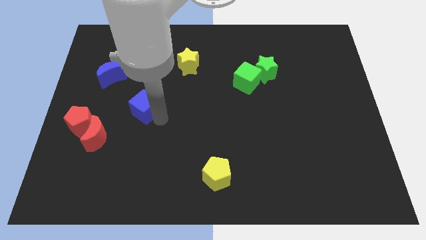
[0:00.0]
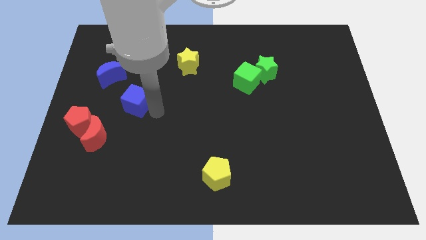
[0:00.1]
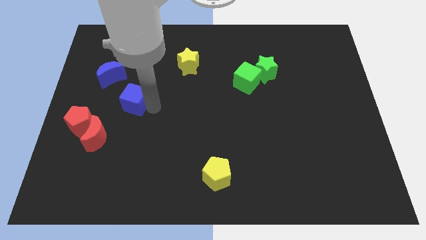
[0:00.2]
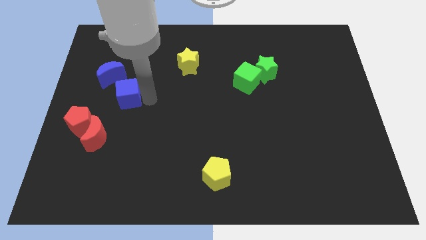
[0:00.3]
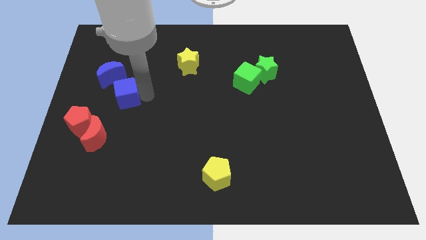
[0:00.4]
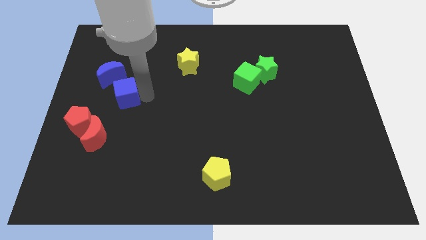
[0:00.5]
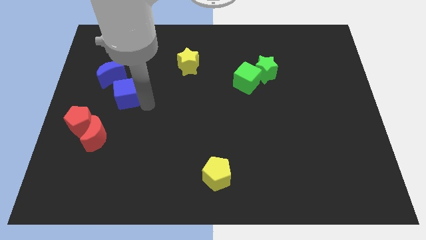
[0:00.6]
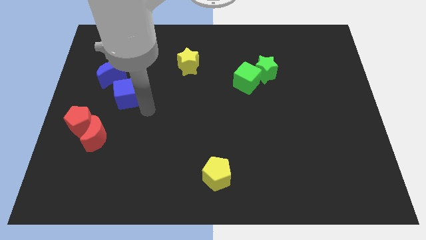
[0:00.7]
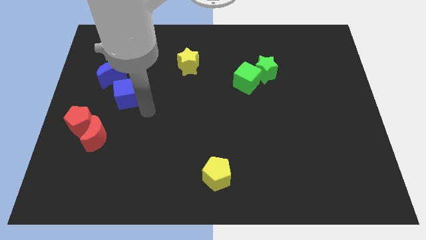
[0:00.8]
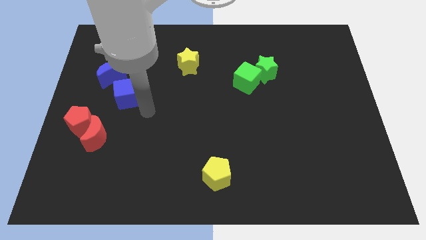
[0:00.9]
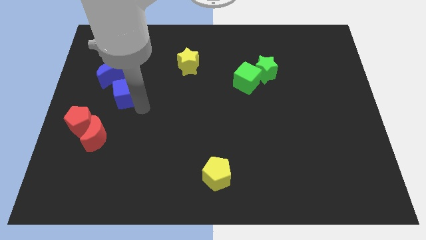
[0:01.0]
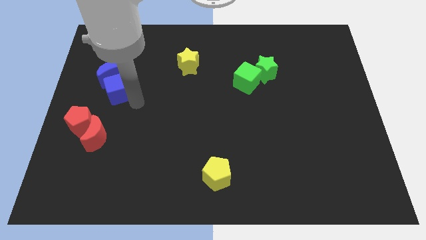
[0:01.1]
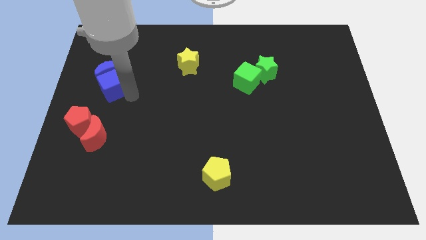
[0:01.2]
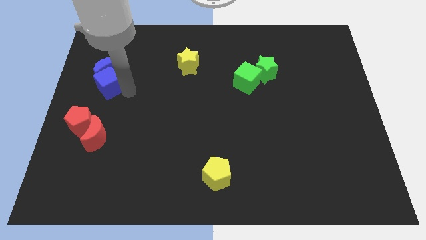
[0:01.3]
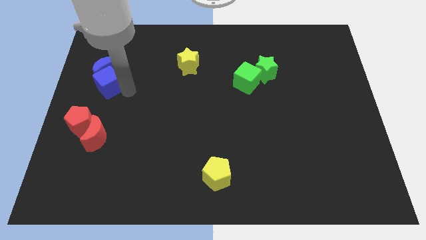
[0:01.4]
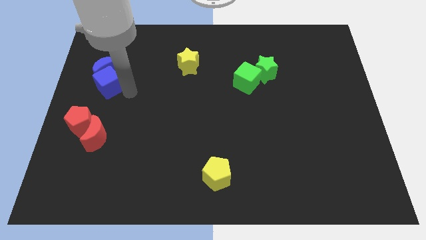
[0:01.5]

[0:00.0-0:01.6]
push the blue cube into the blue crescent

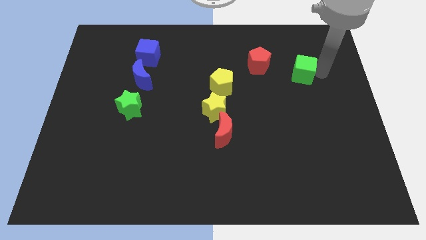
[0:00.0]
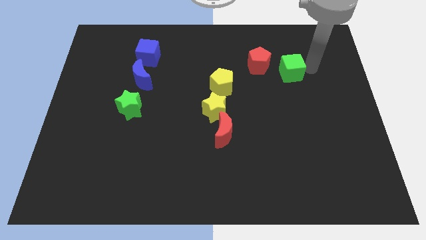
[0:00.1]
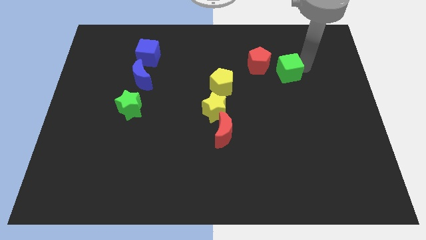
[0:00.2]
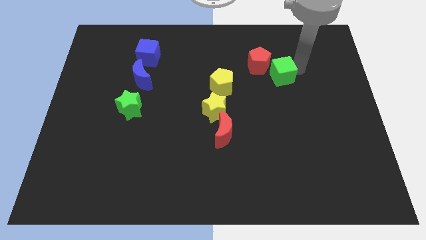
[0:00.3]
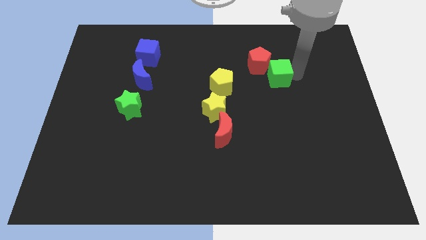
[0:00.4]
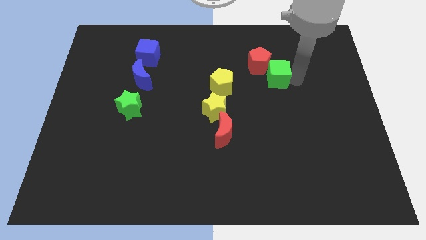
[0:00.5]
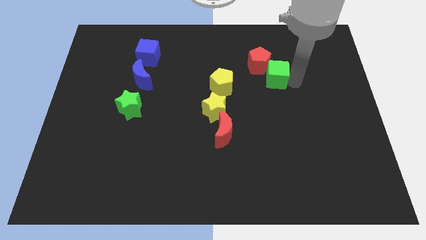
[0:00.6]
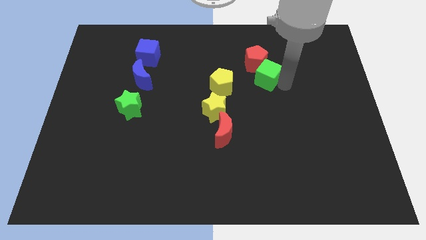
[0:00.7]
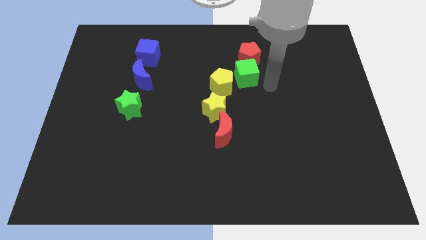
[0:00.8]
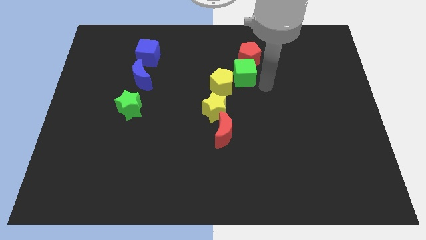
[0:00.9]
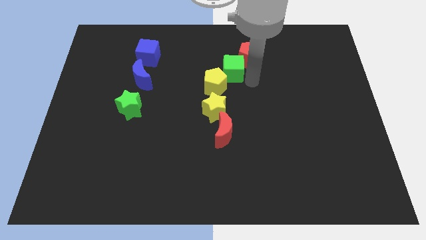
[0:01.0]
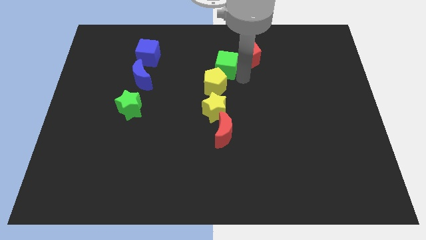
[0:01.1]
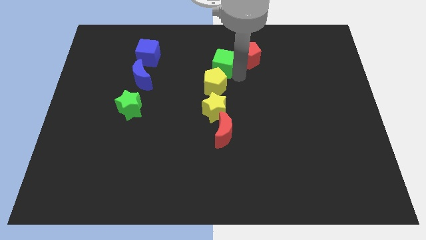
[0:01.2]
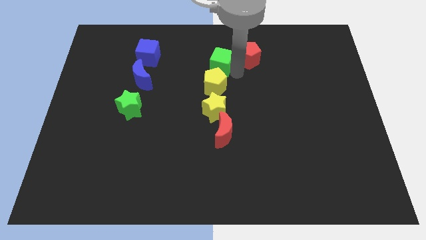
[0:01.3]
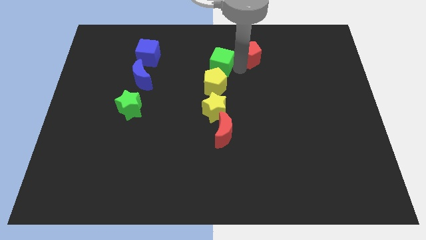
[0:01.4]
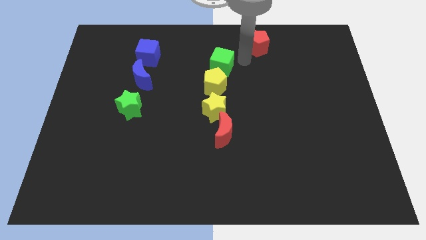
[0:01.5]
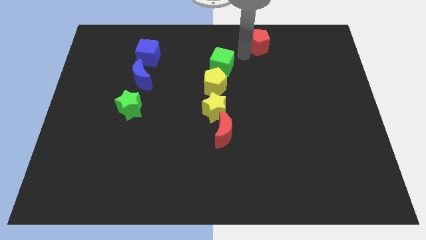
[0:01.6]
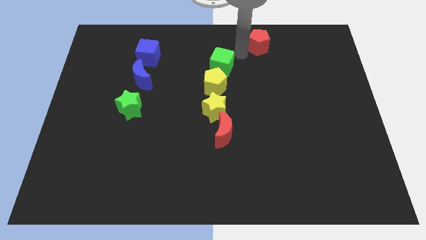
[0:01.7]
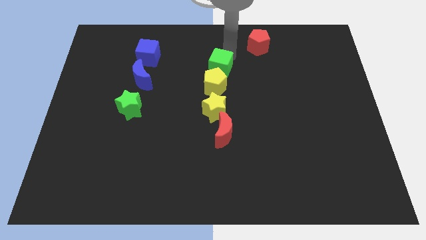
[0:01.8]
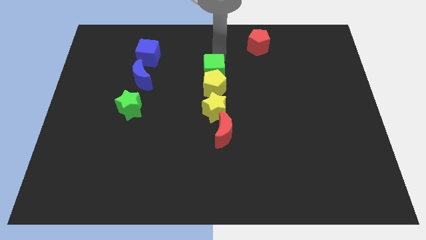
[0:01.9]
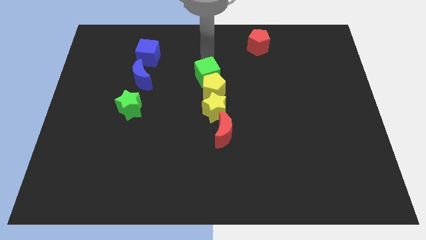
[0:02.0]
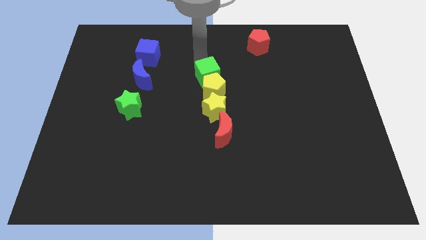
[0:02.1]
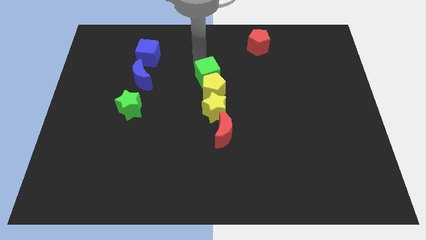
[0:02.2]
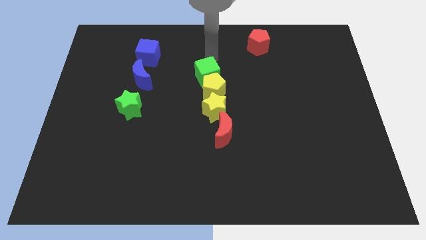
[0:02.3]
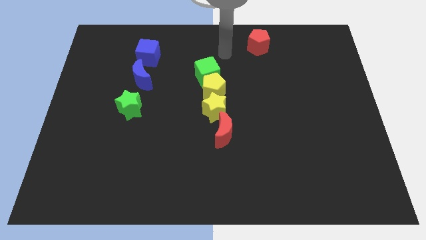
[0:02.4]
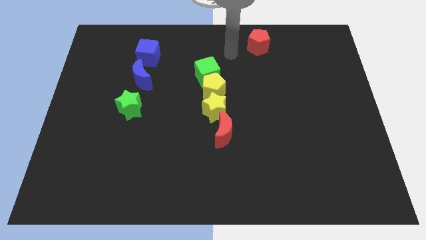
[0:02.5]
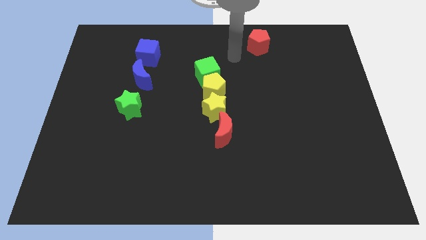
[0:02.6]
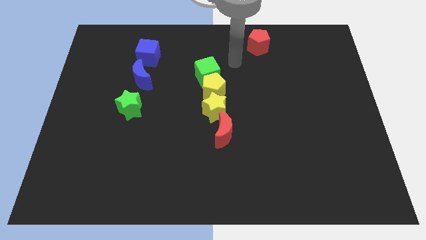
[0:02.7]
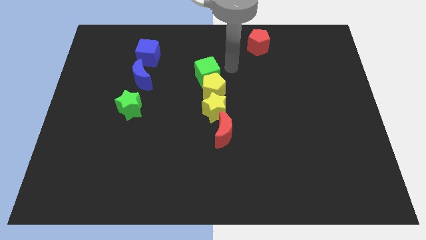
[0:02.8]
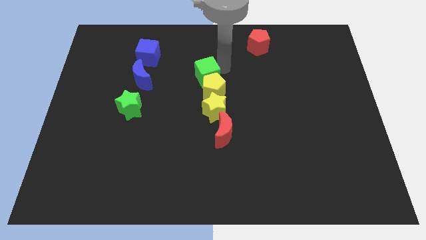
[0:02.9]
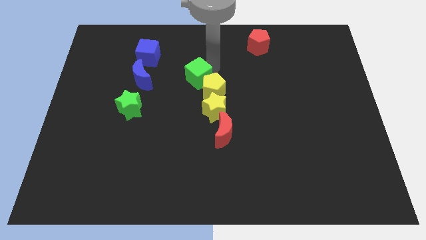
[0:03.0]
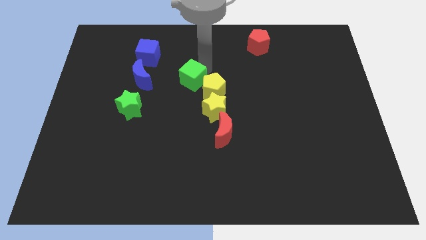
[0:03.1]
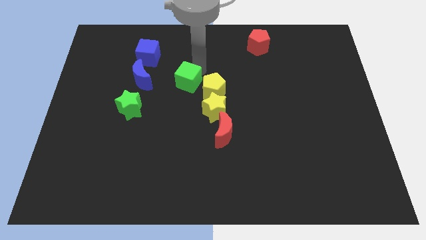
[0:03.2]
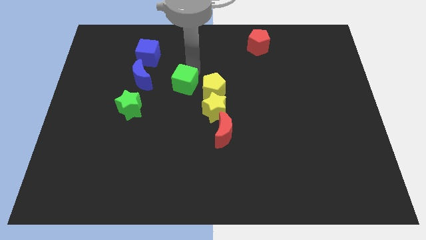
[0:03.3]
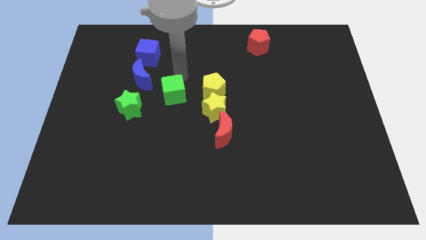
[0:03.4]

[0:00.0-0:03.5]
move the green cube to the left side of the yellow pentagon

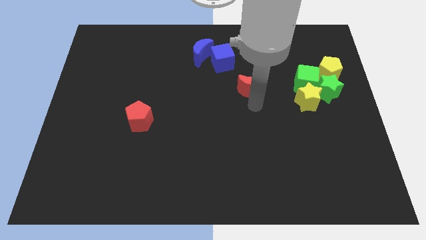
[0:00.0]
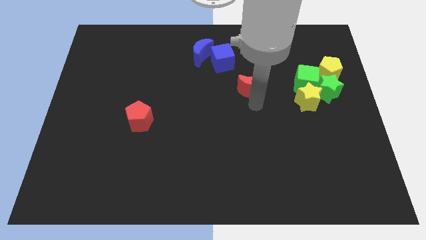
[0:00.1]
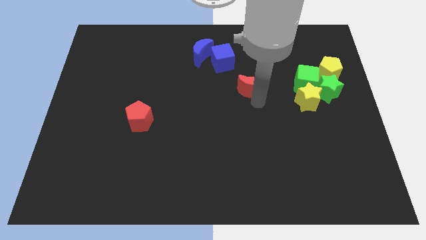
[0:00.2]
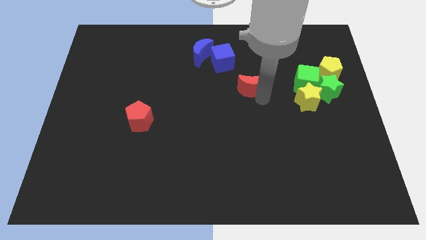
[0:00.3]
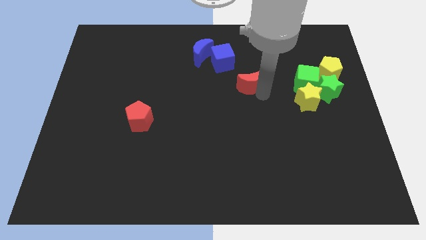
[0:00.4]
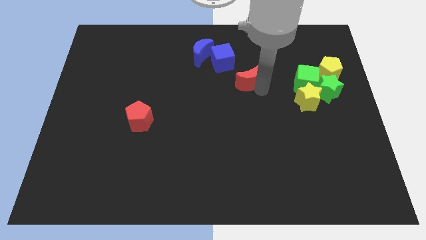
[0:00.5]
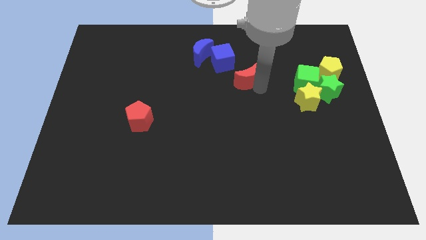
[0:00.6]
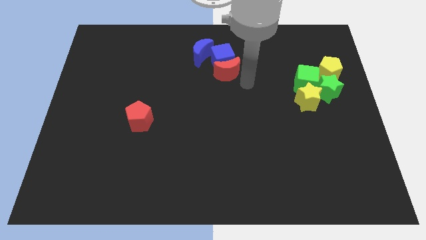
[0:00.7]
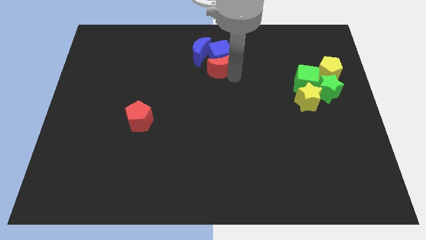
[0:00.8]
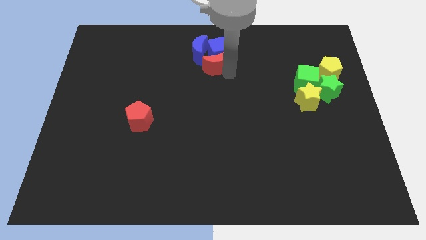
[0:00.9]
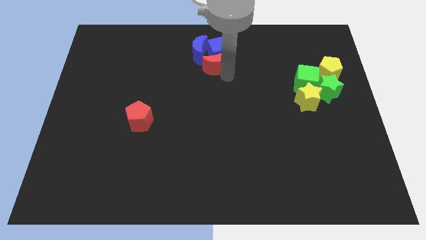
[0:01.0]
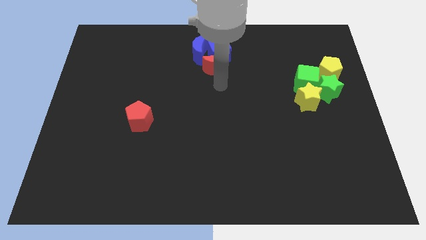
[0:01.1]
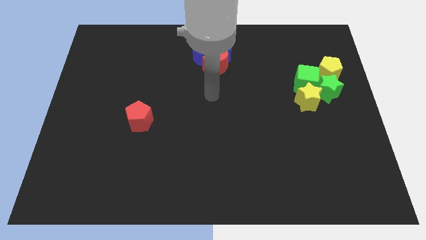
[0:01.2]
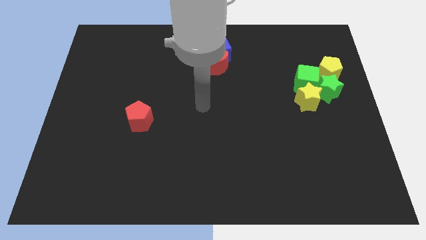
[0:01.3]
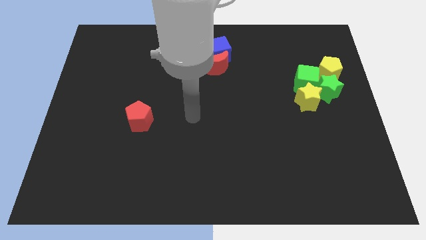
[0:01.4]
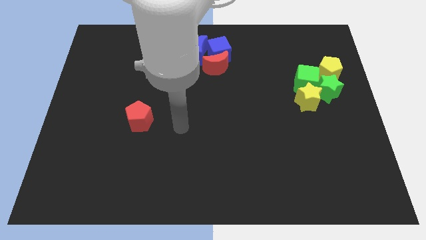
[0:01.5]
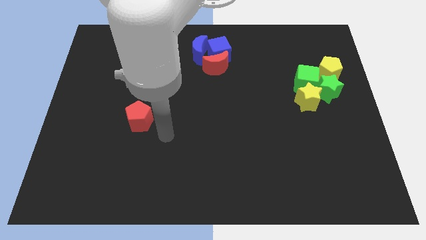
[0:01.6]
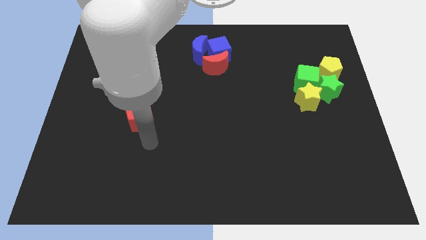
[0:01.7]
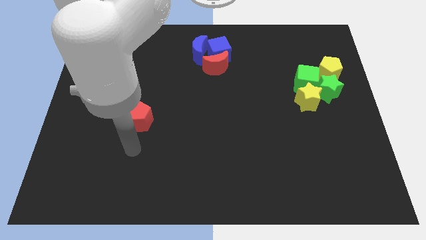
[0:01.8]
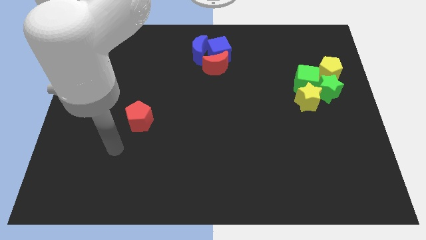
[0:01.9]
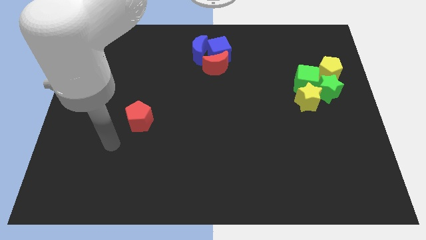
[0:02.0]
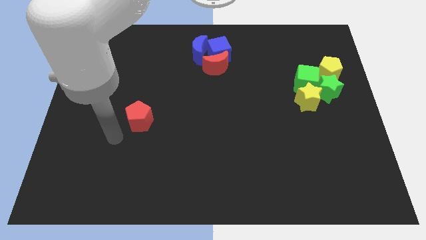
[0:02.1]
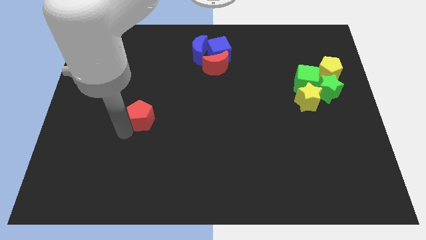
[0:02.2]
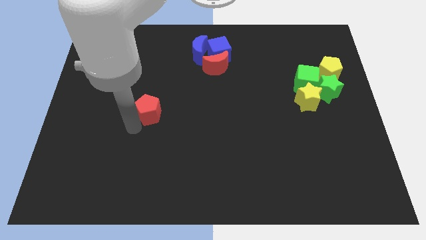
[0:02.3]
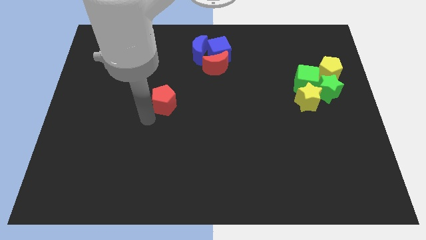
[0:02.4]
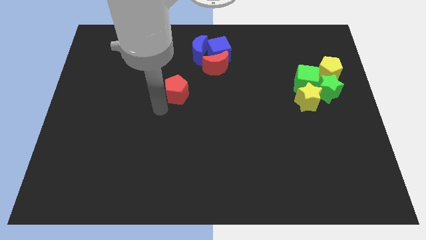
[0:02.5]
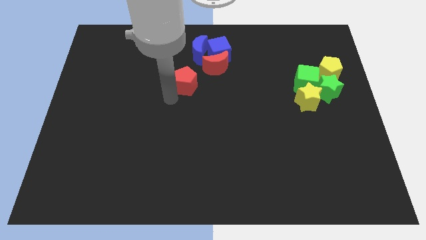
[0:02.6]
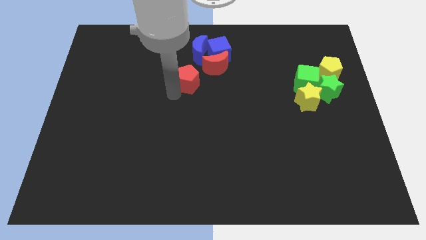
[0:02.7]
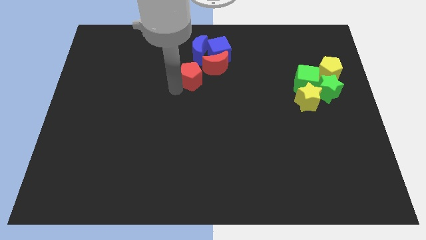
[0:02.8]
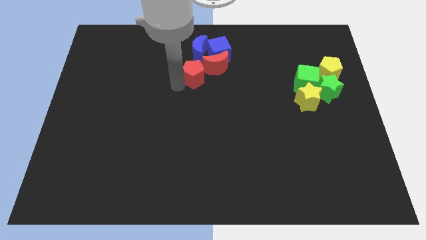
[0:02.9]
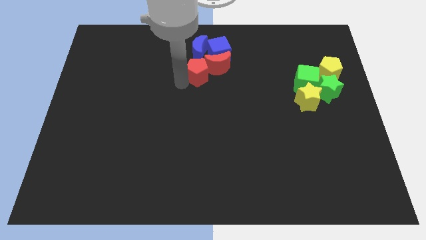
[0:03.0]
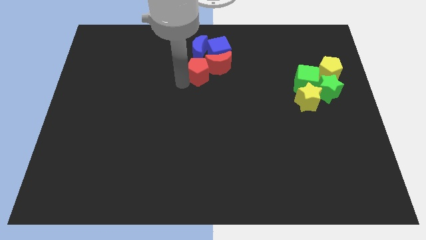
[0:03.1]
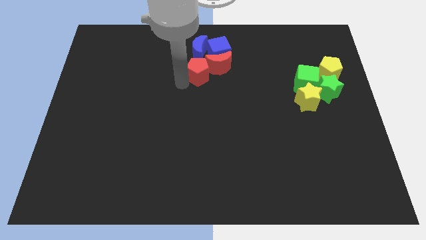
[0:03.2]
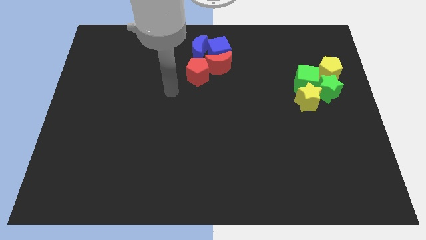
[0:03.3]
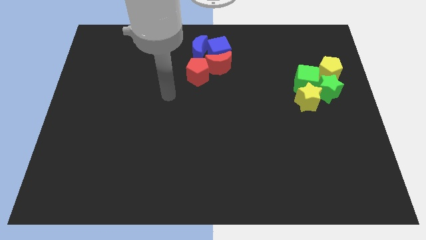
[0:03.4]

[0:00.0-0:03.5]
place the red and blue blocks together

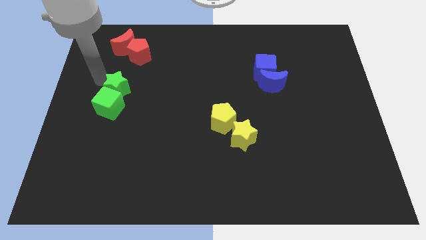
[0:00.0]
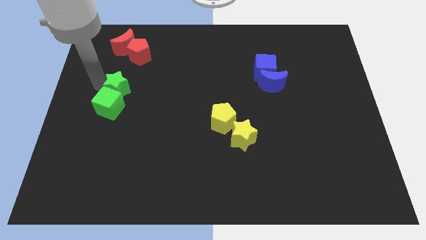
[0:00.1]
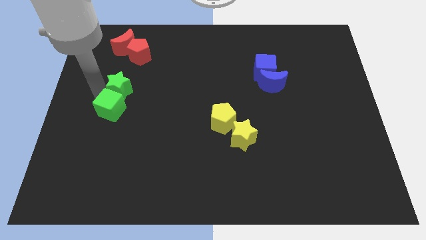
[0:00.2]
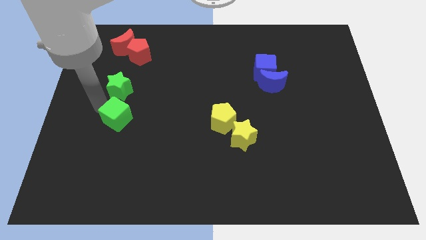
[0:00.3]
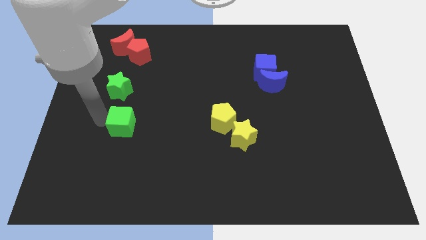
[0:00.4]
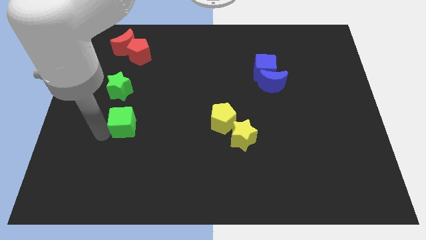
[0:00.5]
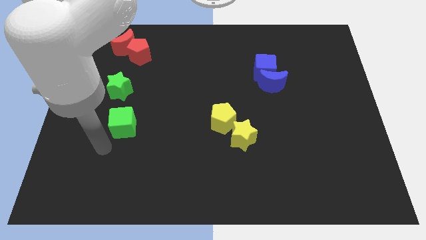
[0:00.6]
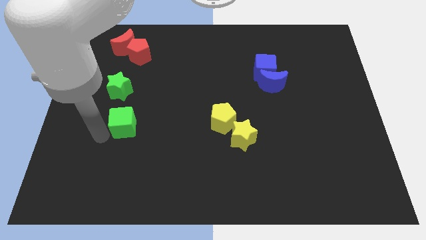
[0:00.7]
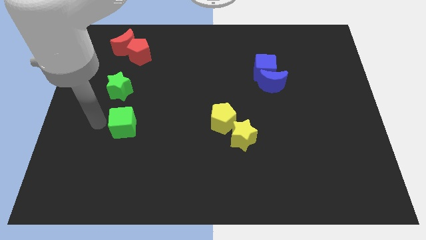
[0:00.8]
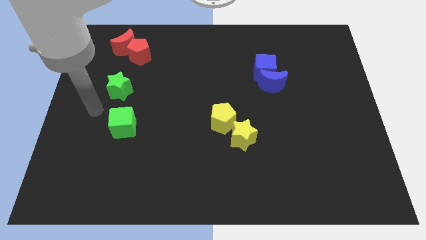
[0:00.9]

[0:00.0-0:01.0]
push the green star parallel to the left center
